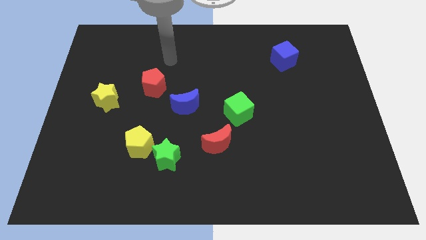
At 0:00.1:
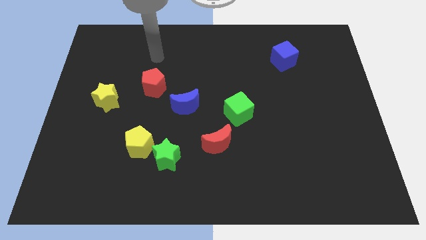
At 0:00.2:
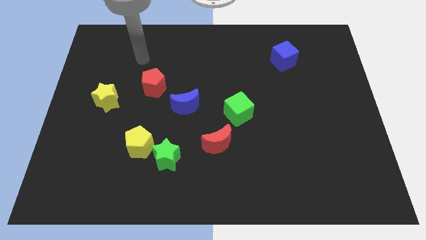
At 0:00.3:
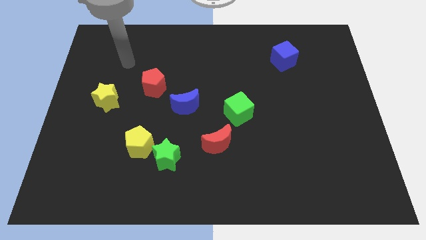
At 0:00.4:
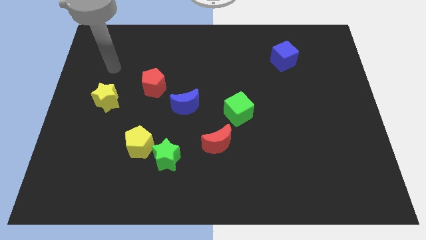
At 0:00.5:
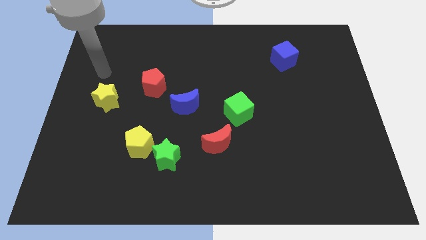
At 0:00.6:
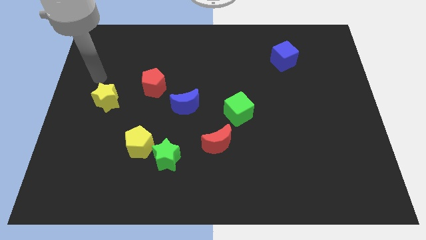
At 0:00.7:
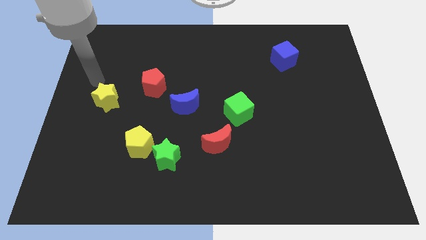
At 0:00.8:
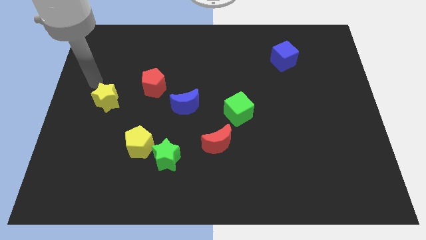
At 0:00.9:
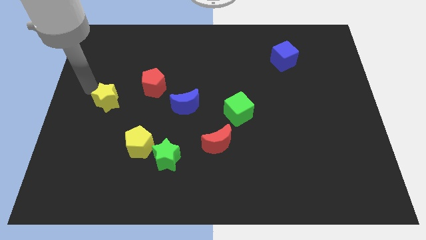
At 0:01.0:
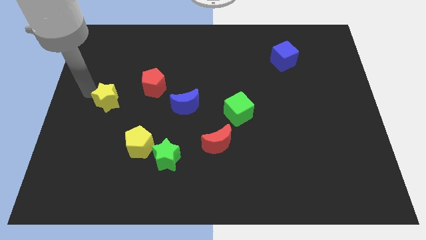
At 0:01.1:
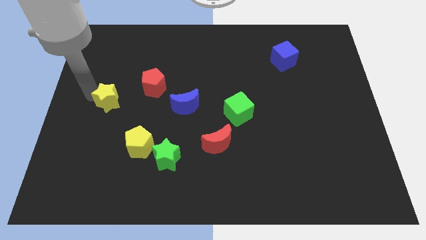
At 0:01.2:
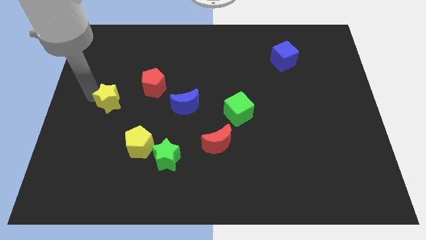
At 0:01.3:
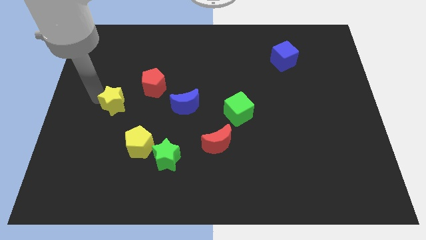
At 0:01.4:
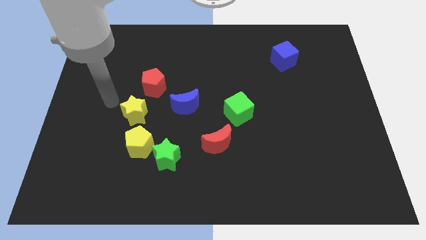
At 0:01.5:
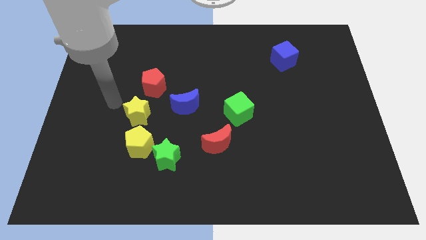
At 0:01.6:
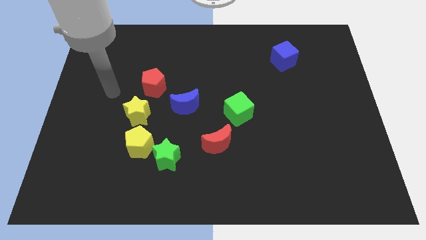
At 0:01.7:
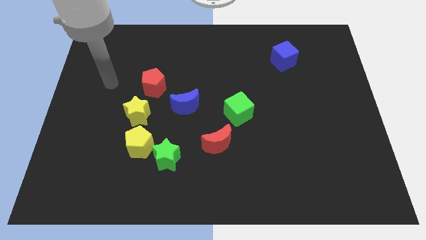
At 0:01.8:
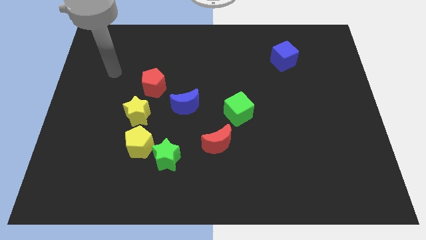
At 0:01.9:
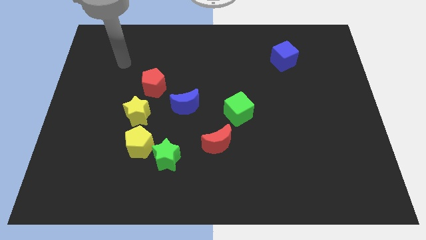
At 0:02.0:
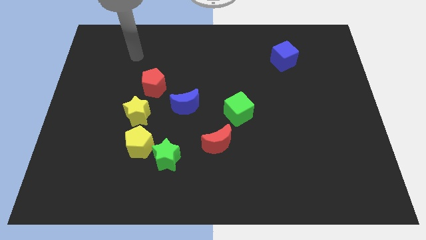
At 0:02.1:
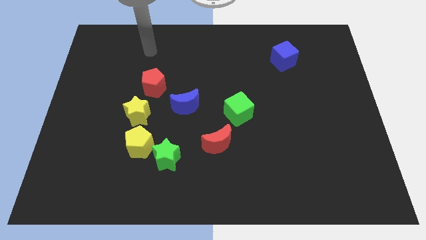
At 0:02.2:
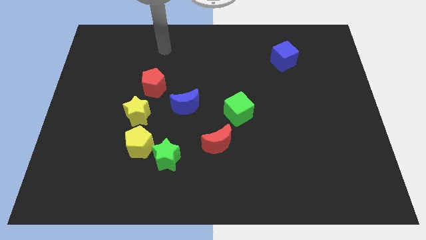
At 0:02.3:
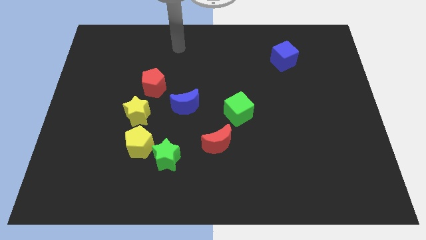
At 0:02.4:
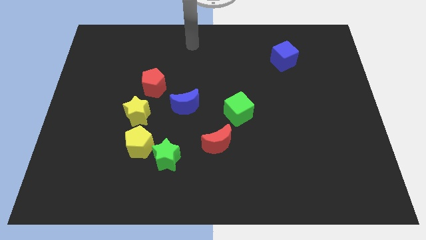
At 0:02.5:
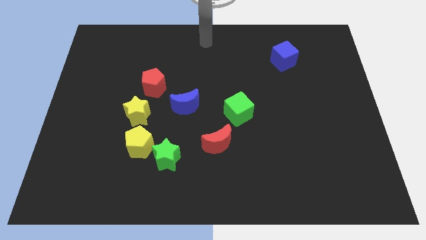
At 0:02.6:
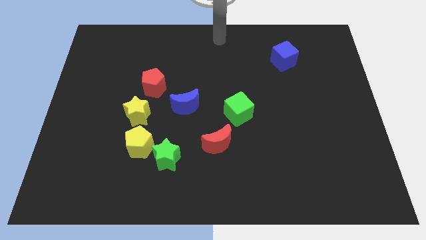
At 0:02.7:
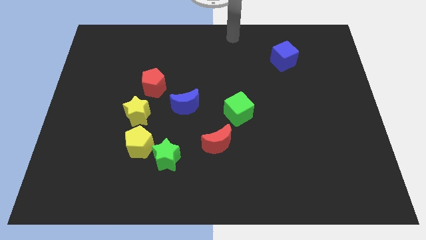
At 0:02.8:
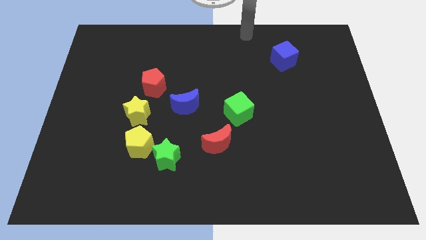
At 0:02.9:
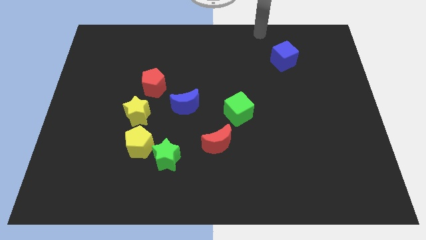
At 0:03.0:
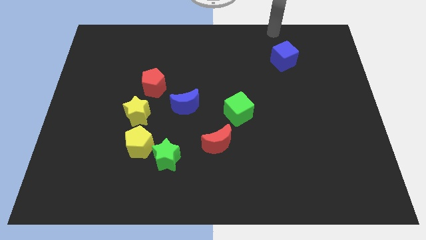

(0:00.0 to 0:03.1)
put the yellow star on the top side of the yellow pentagon

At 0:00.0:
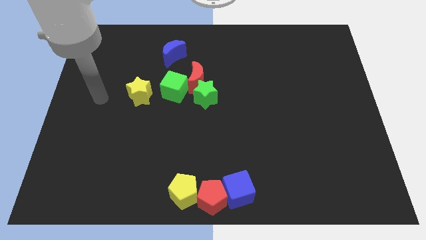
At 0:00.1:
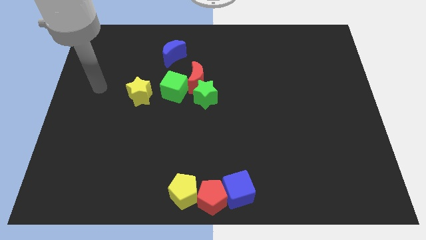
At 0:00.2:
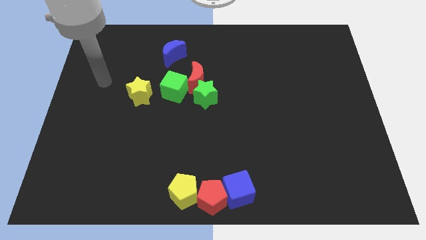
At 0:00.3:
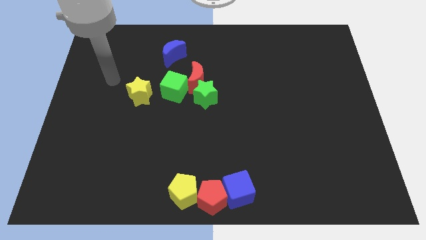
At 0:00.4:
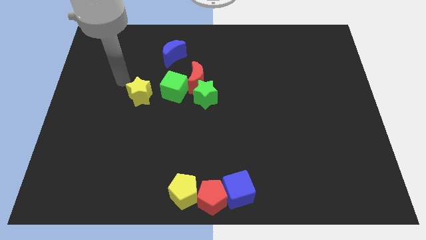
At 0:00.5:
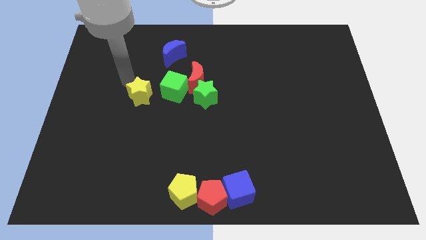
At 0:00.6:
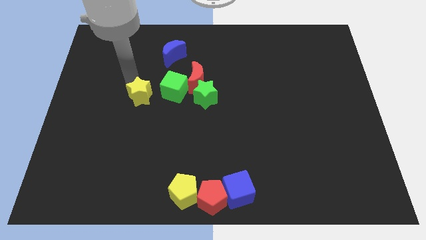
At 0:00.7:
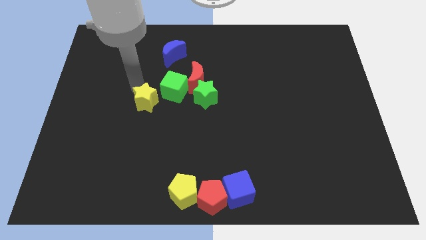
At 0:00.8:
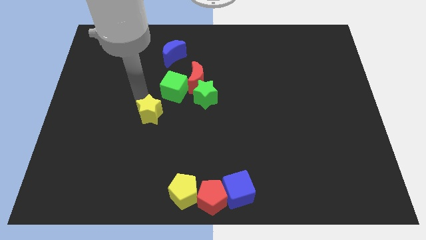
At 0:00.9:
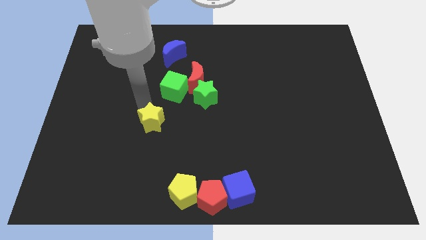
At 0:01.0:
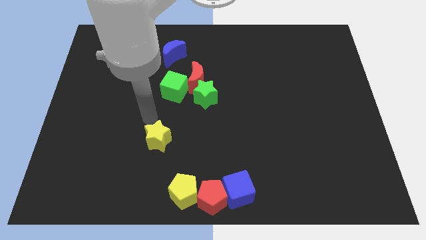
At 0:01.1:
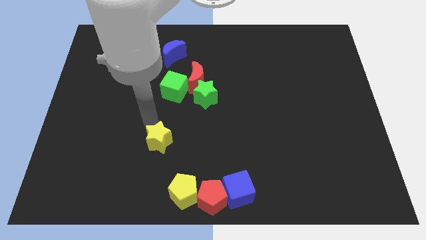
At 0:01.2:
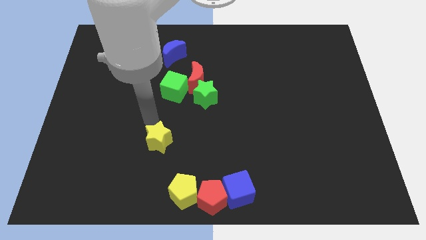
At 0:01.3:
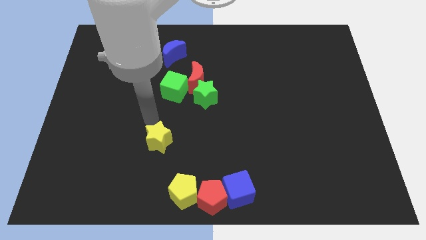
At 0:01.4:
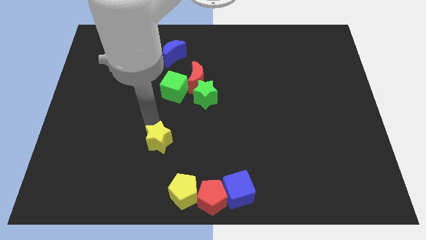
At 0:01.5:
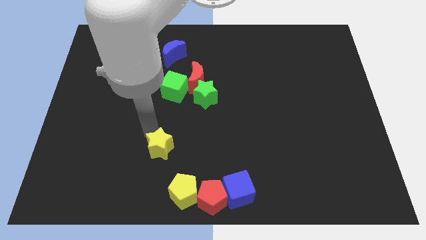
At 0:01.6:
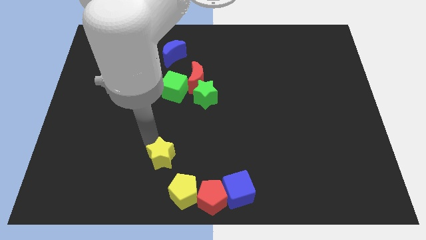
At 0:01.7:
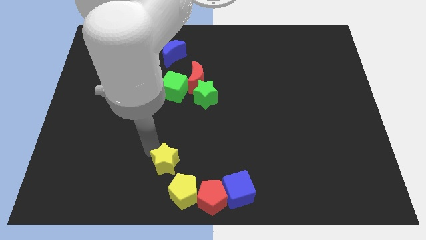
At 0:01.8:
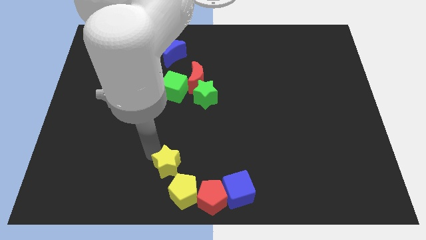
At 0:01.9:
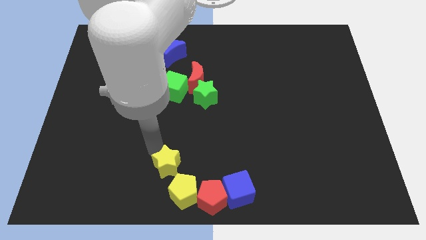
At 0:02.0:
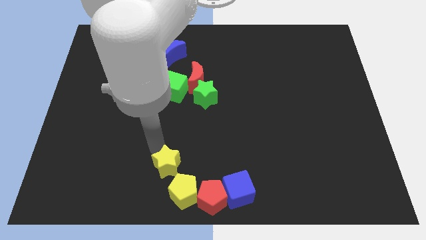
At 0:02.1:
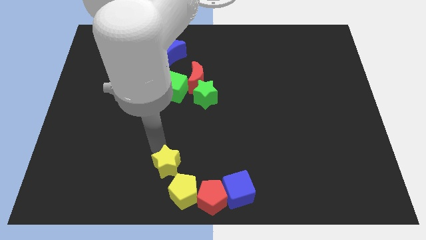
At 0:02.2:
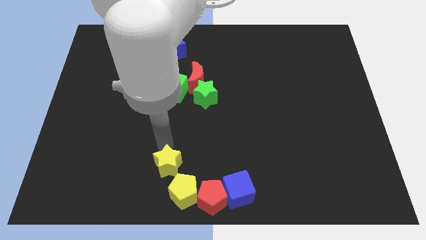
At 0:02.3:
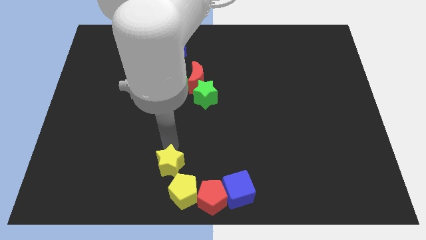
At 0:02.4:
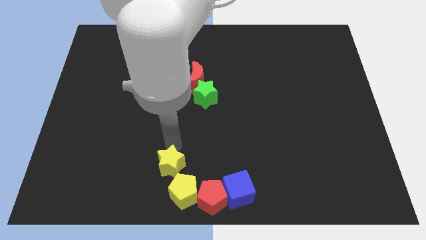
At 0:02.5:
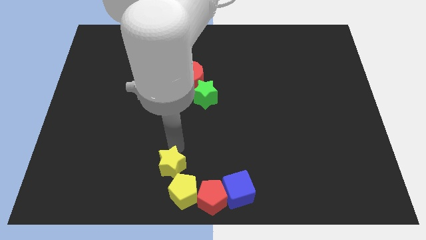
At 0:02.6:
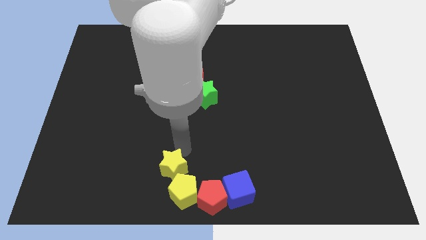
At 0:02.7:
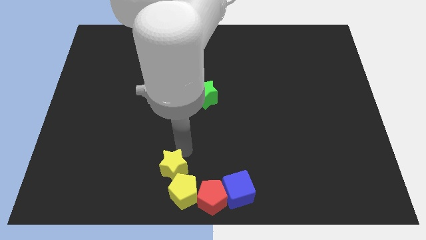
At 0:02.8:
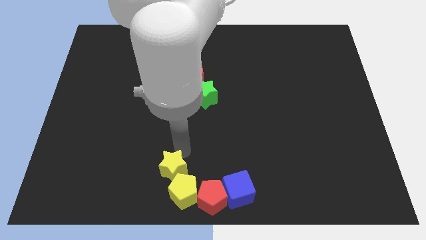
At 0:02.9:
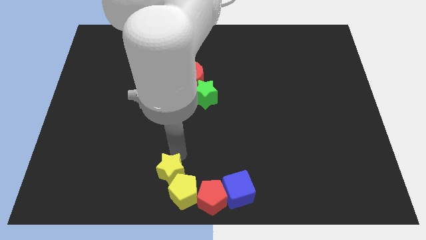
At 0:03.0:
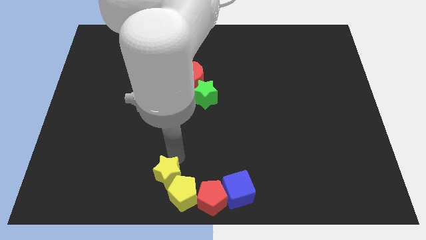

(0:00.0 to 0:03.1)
push the yellow star top left to the yellow pentagon

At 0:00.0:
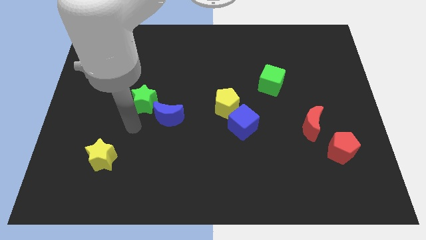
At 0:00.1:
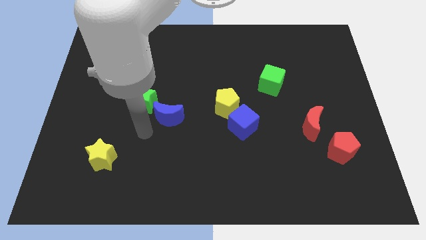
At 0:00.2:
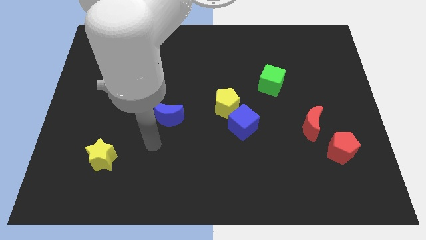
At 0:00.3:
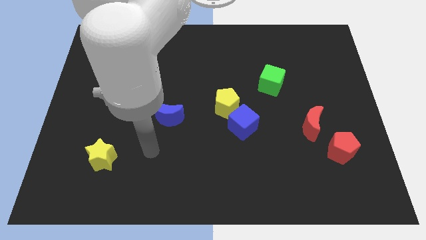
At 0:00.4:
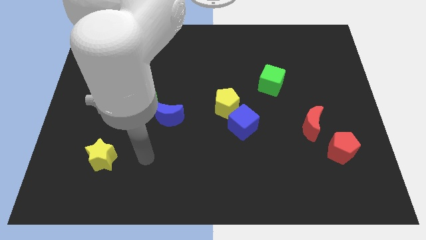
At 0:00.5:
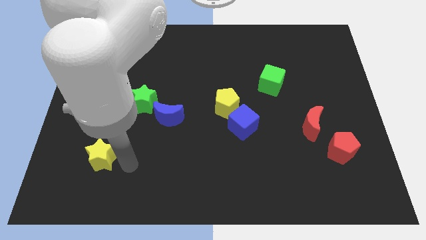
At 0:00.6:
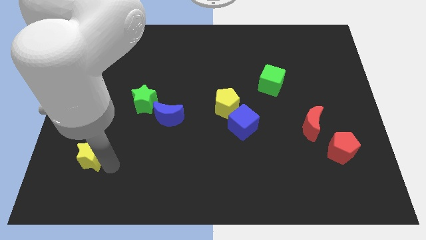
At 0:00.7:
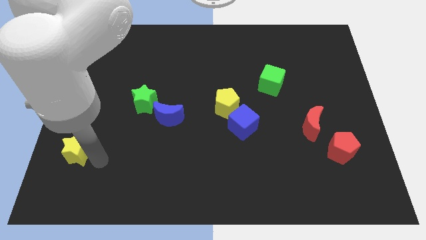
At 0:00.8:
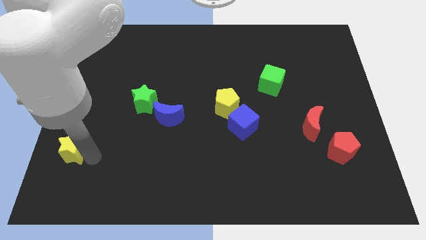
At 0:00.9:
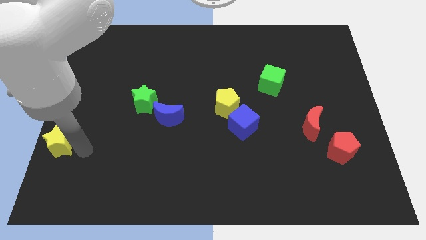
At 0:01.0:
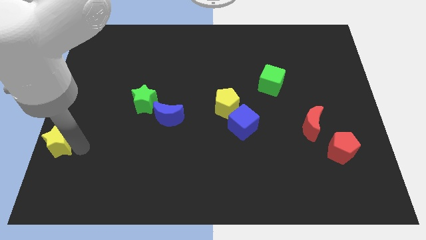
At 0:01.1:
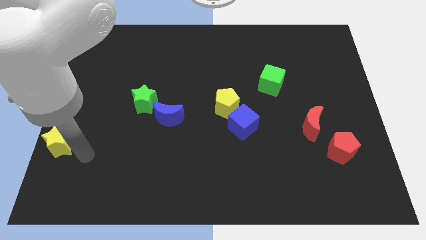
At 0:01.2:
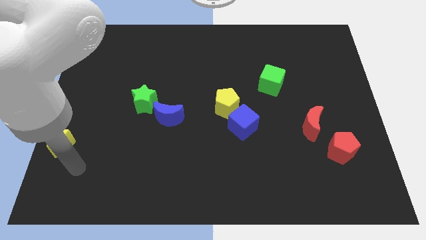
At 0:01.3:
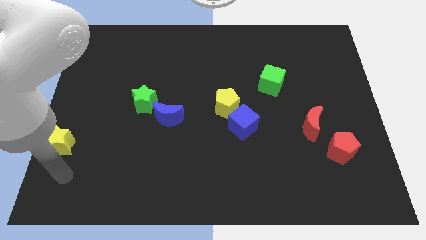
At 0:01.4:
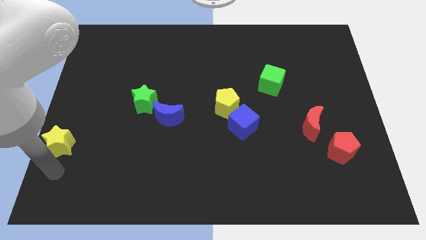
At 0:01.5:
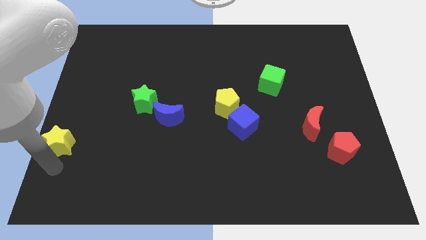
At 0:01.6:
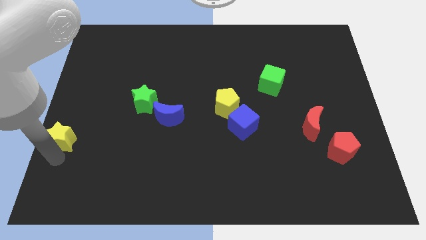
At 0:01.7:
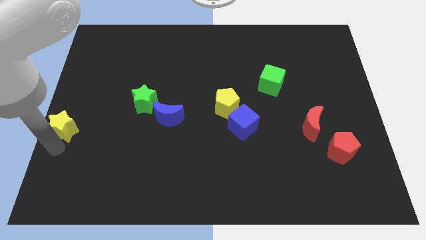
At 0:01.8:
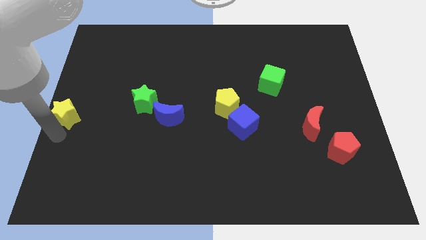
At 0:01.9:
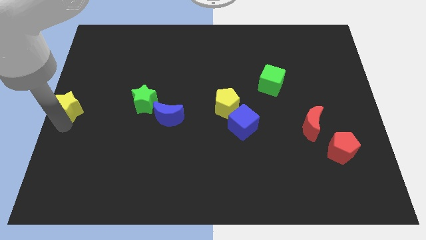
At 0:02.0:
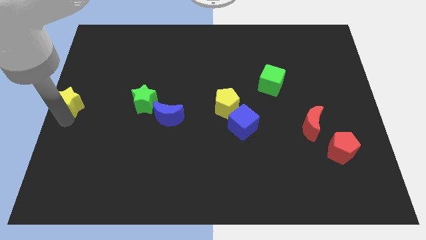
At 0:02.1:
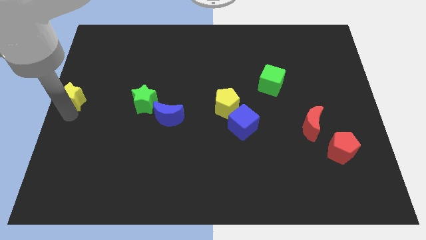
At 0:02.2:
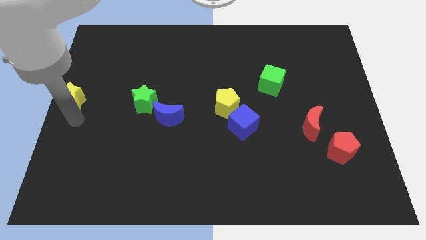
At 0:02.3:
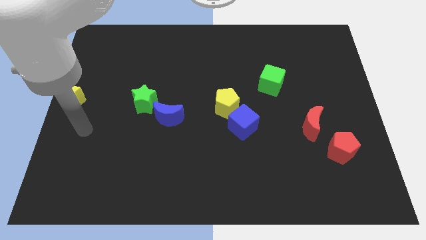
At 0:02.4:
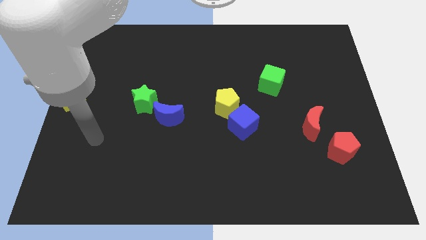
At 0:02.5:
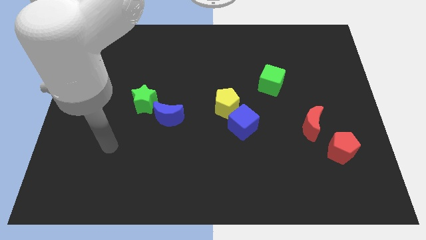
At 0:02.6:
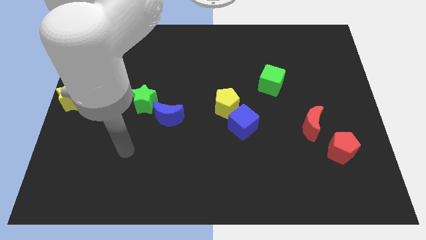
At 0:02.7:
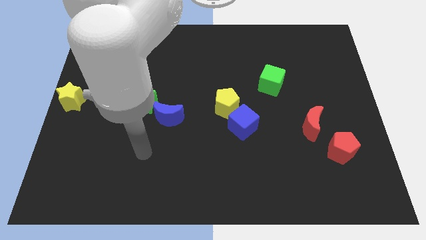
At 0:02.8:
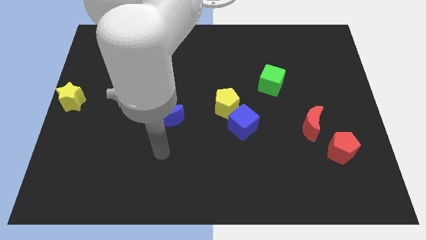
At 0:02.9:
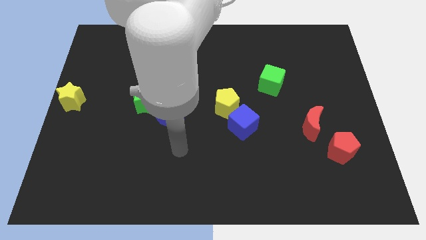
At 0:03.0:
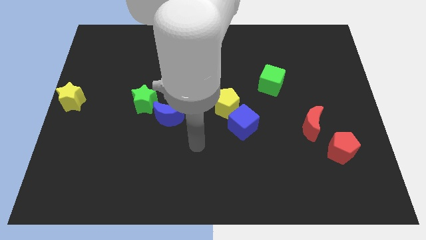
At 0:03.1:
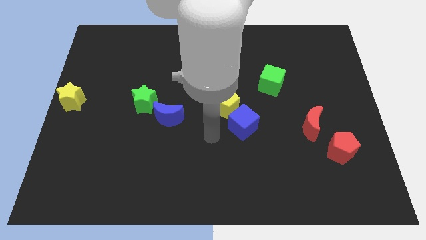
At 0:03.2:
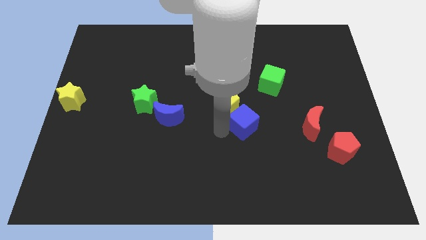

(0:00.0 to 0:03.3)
place the yellow star at the center left of the table
